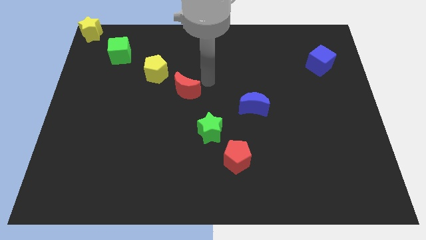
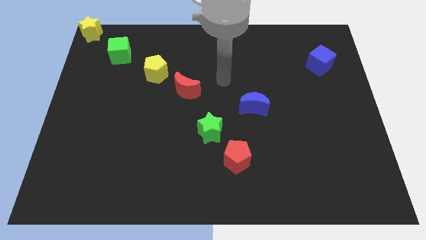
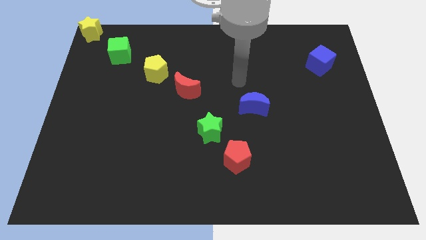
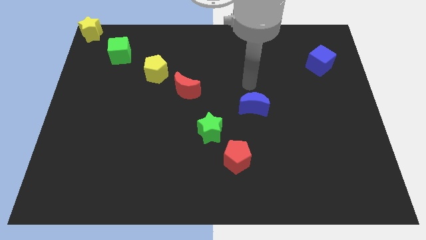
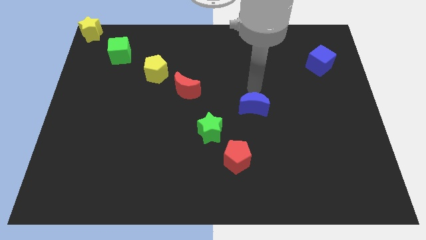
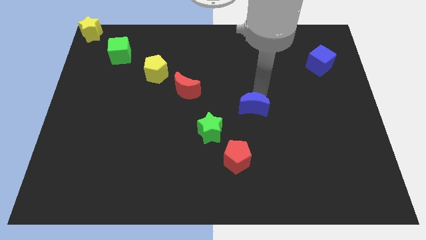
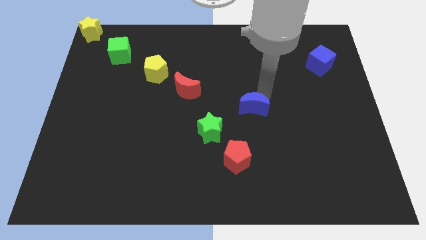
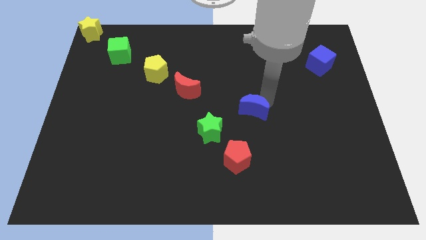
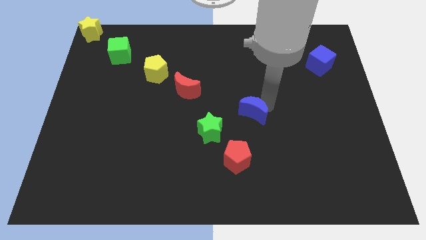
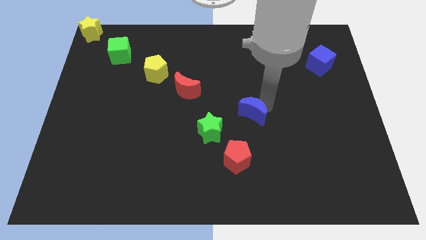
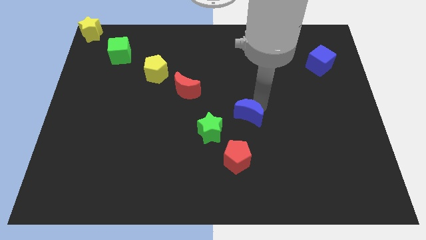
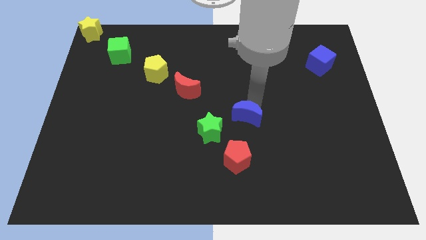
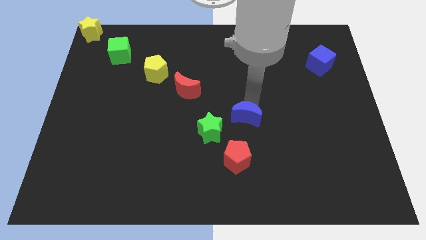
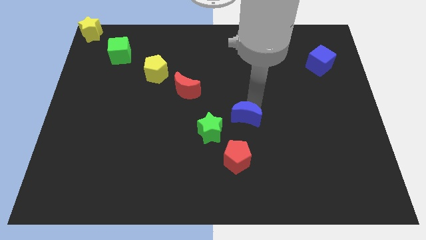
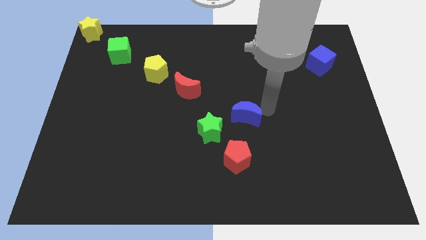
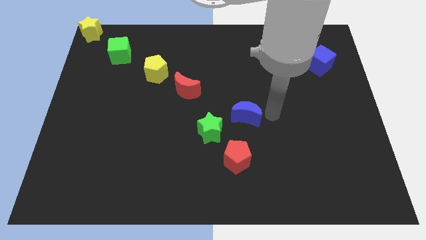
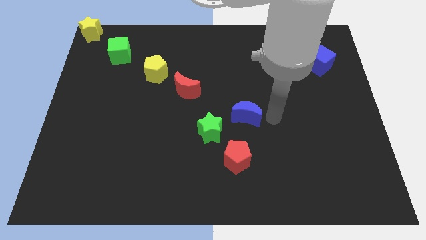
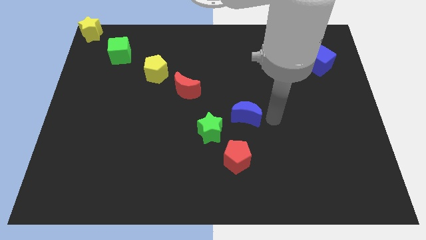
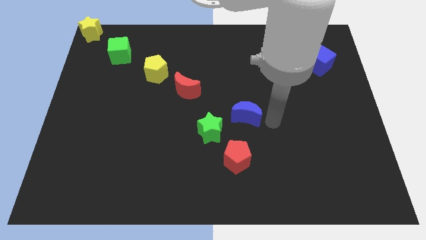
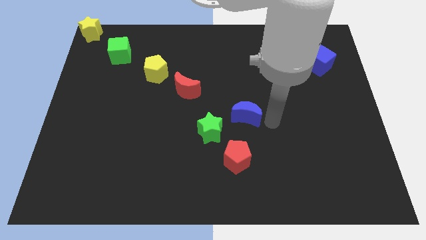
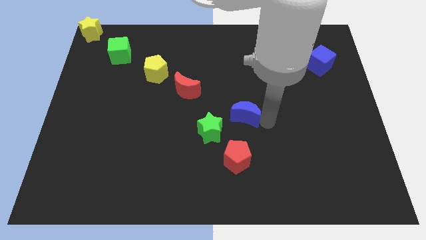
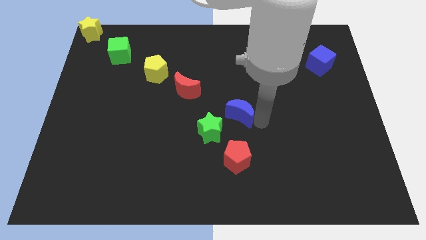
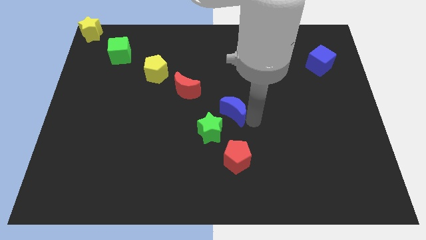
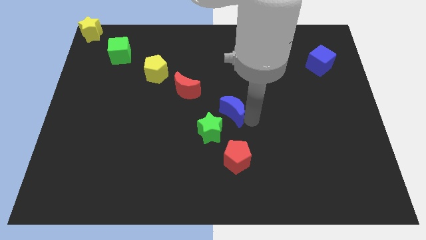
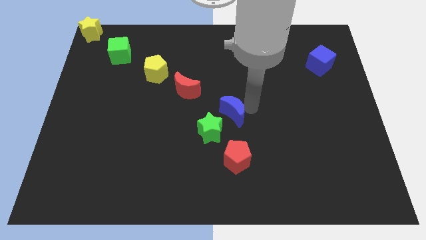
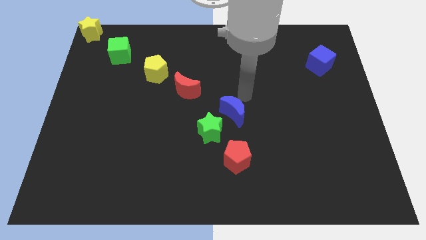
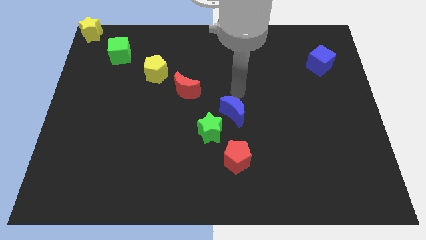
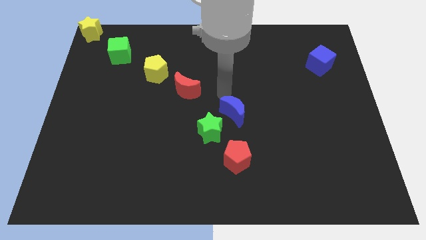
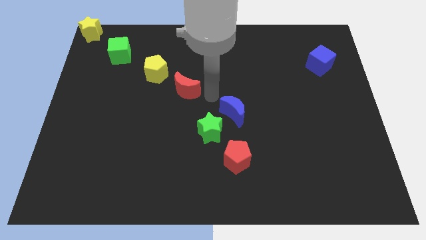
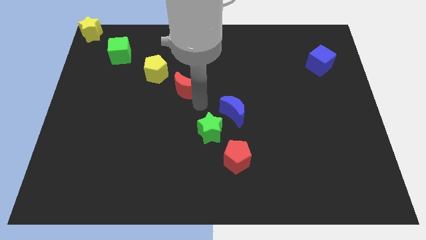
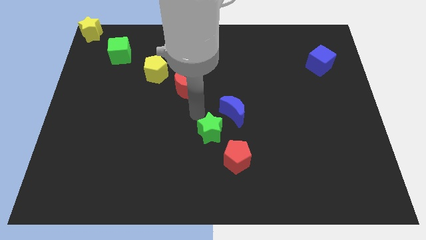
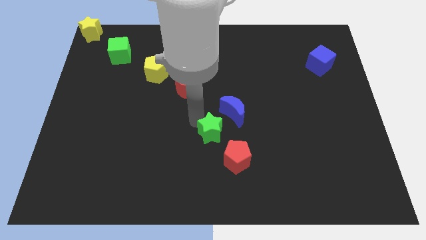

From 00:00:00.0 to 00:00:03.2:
slide the blue moon to the center of the board

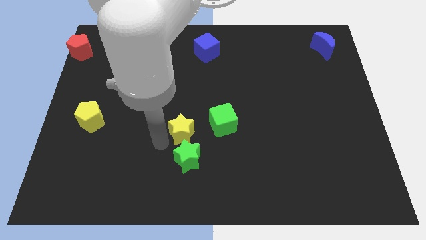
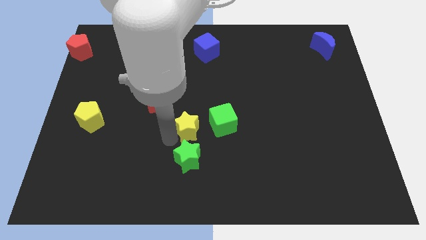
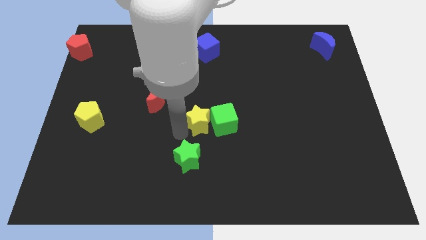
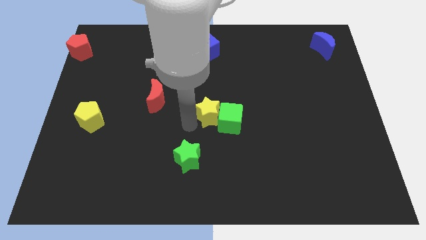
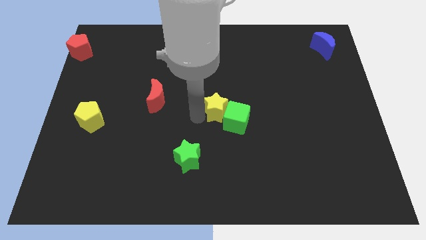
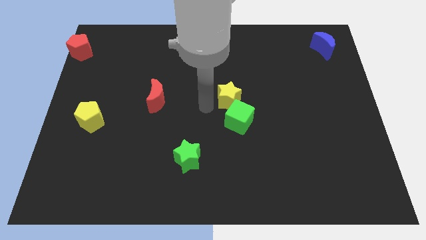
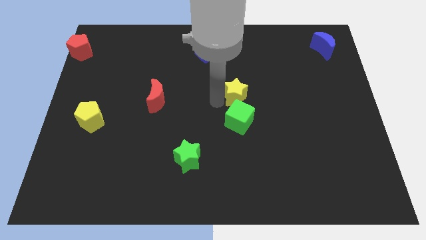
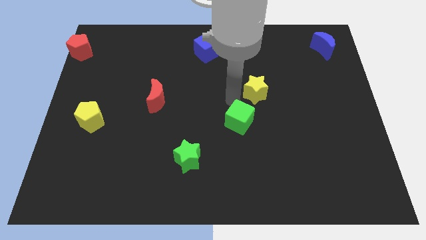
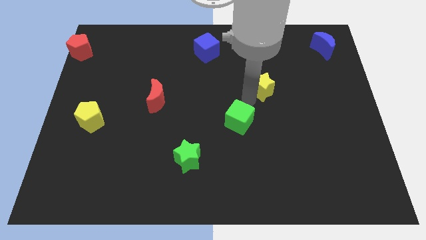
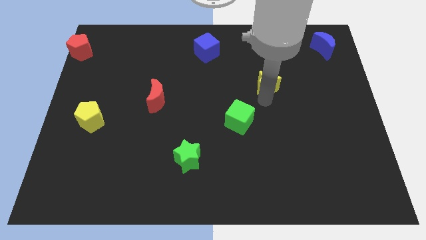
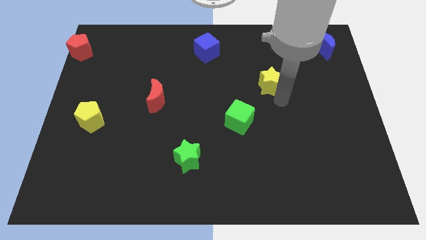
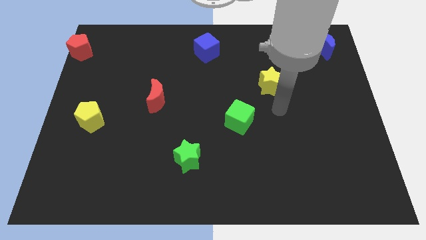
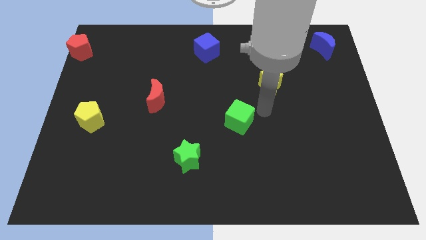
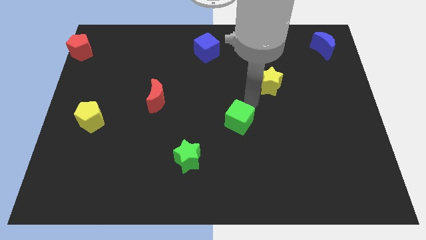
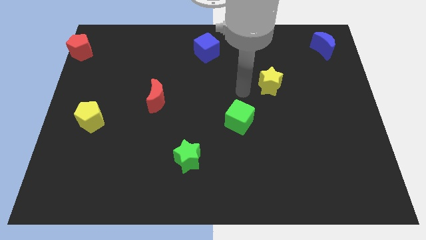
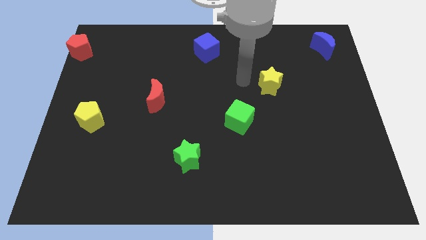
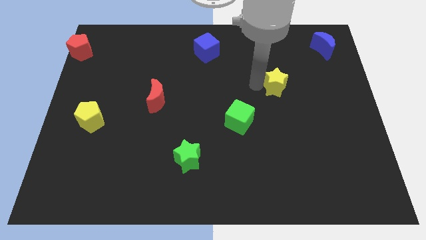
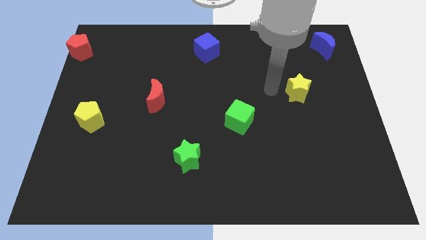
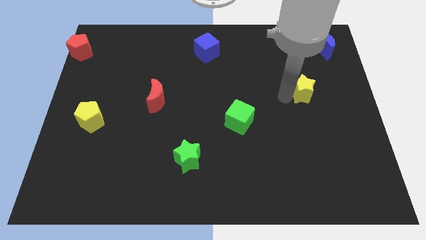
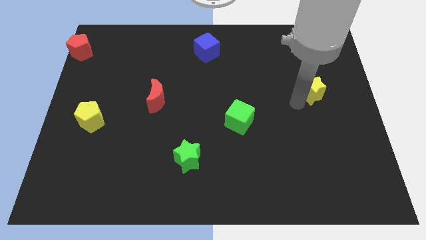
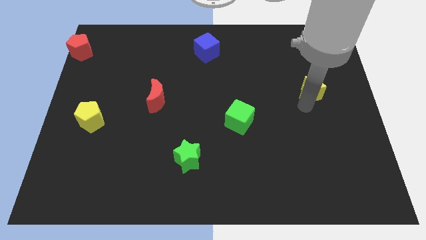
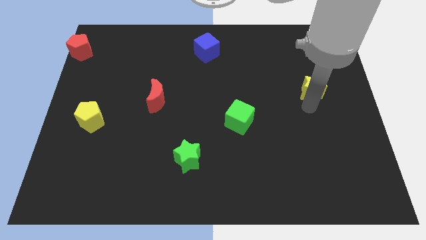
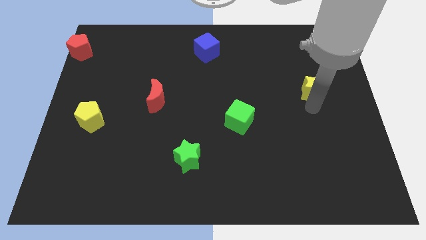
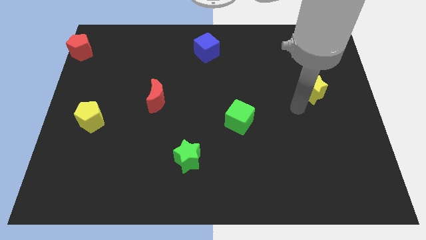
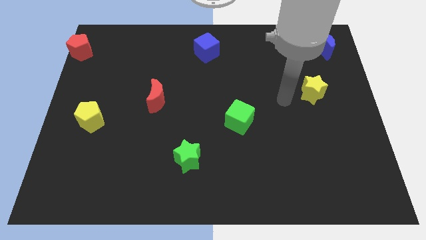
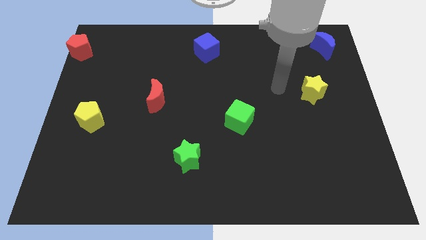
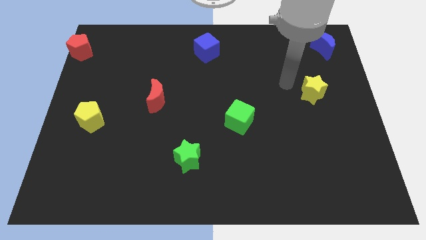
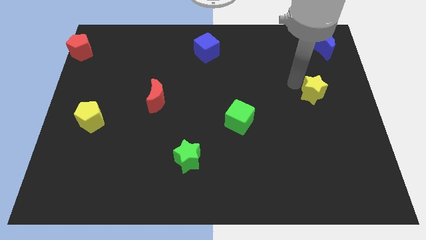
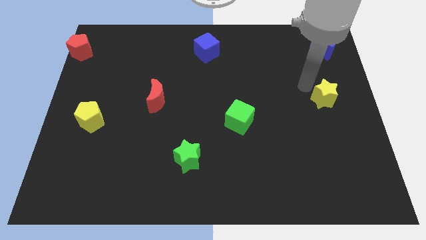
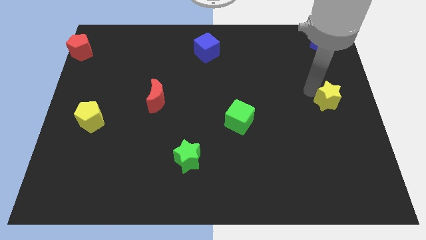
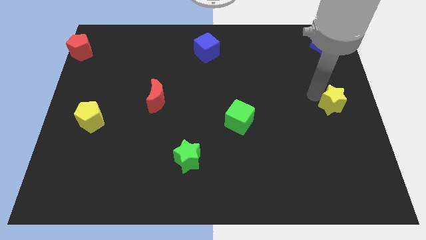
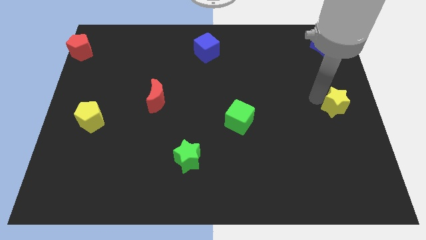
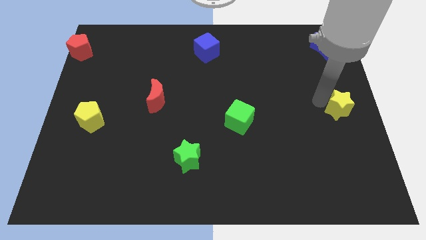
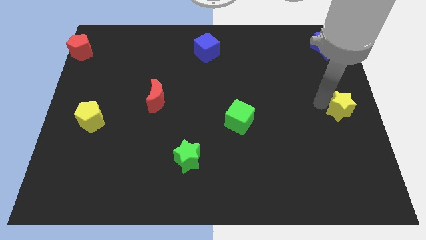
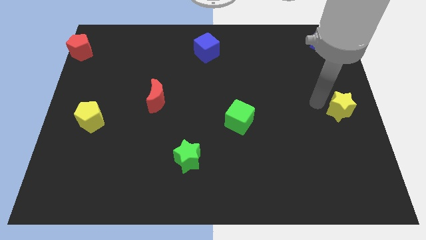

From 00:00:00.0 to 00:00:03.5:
push the yellow star to the centre right of the board

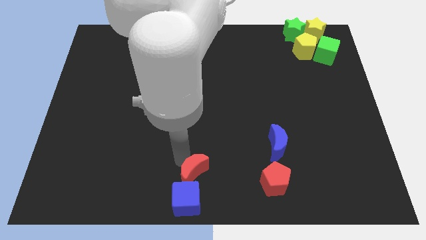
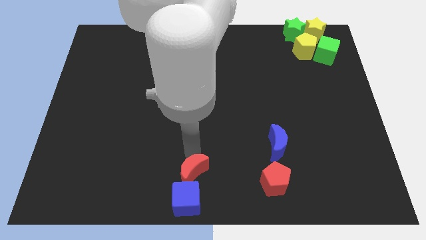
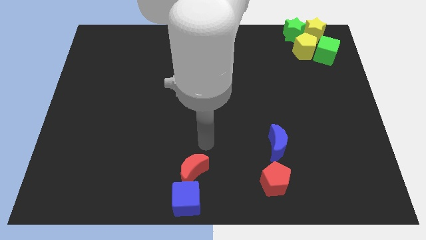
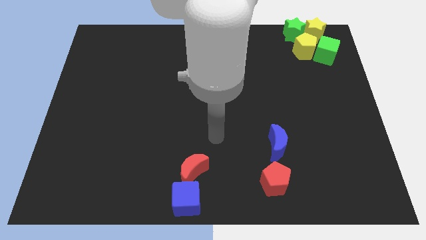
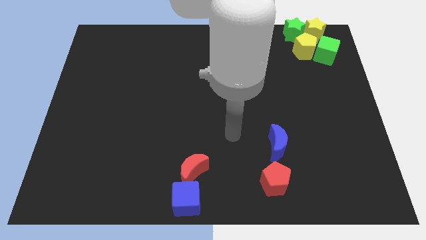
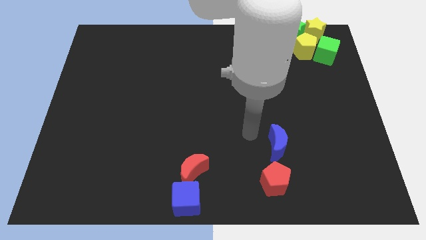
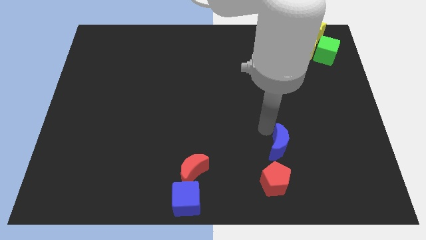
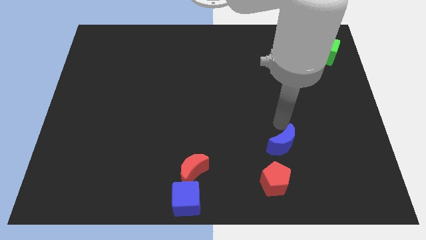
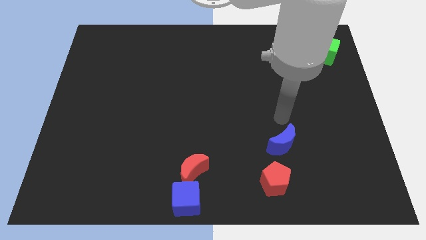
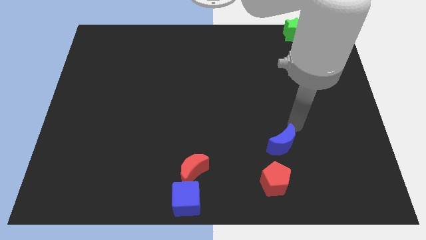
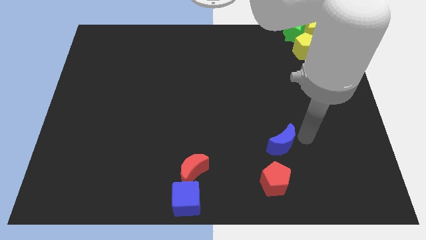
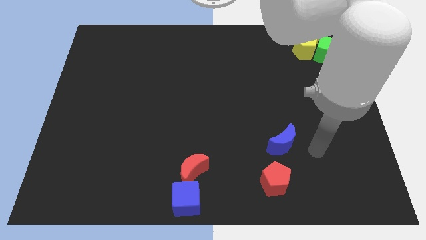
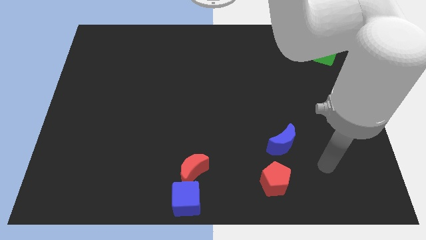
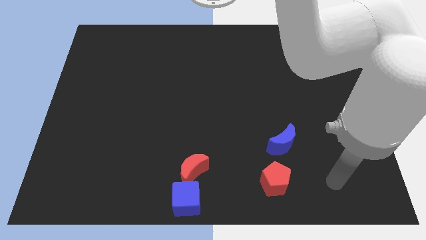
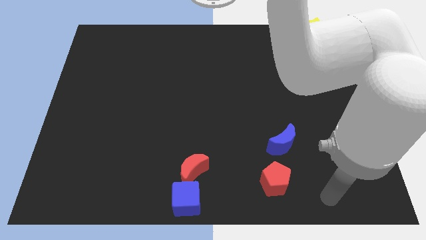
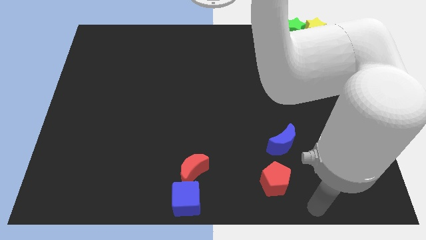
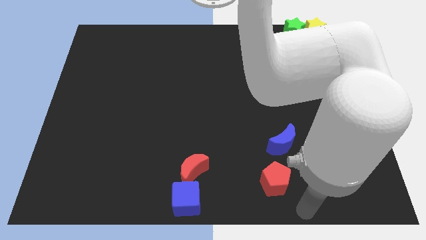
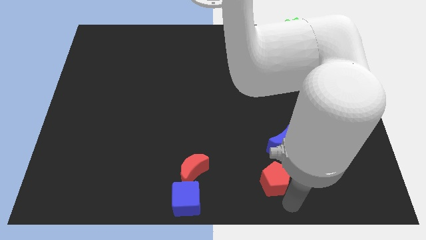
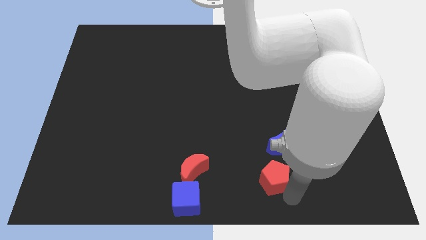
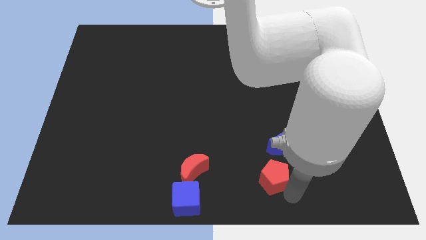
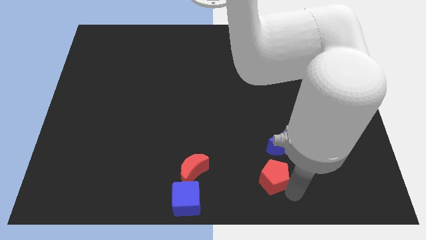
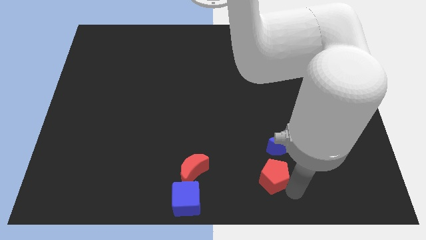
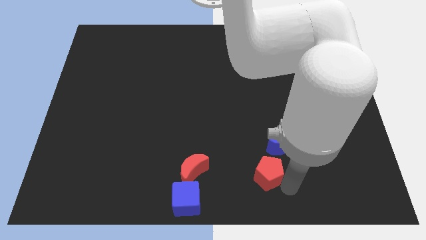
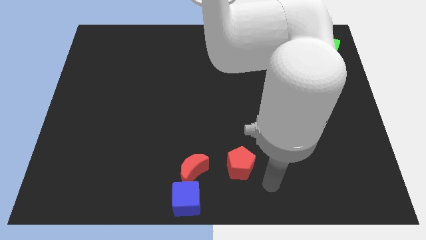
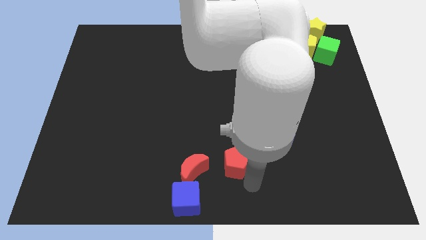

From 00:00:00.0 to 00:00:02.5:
push red pentagon beside red crescent
